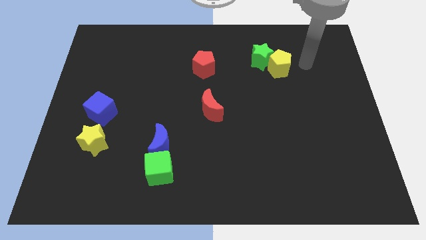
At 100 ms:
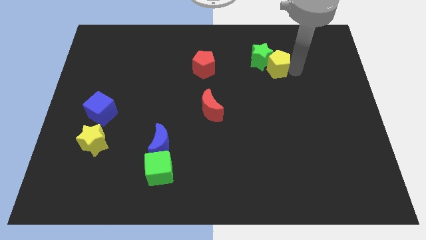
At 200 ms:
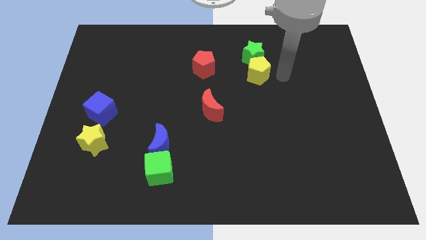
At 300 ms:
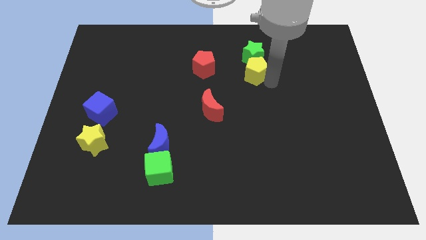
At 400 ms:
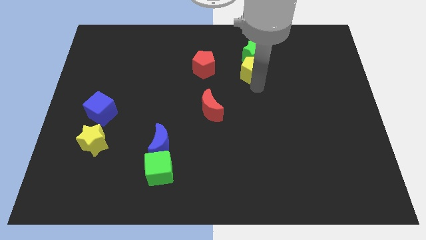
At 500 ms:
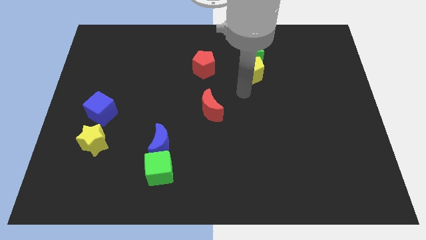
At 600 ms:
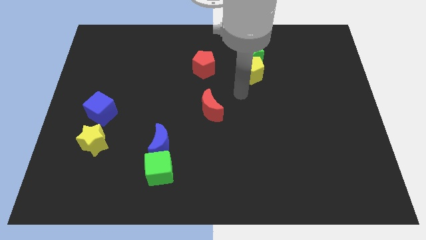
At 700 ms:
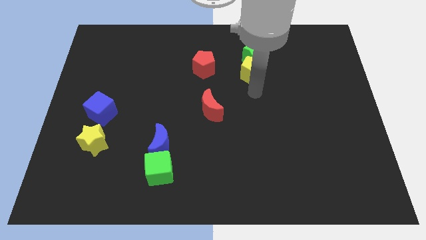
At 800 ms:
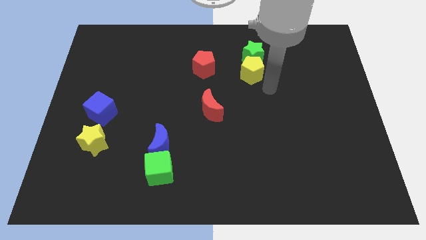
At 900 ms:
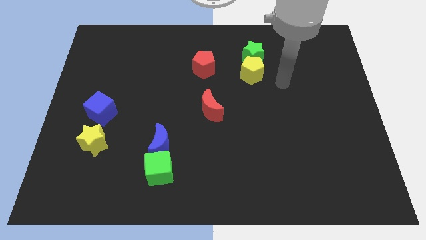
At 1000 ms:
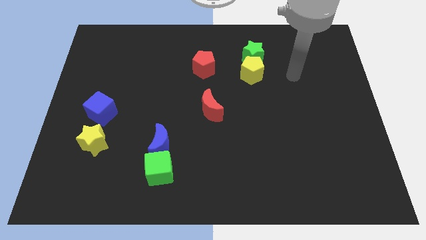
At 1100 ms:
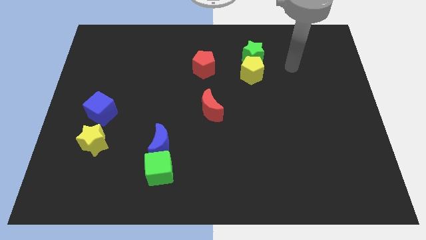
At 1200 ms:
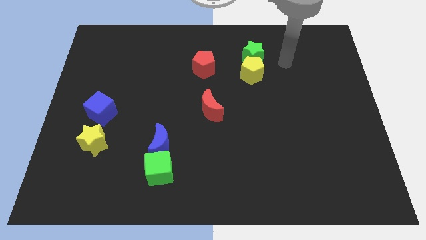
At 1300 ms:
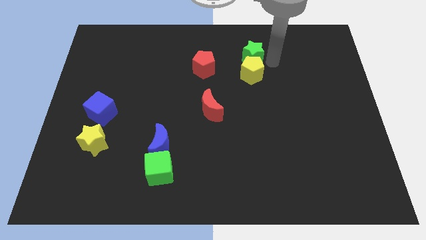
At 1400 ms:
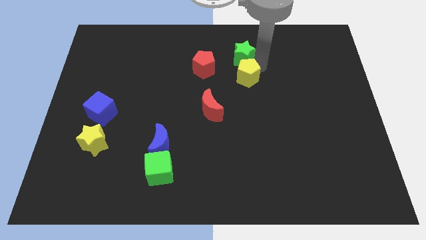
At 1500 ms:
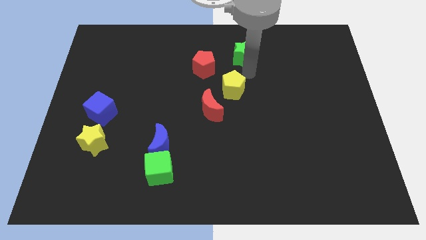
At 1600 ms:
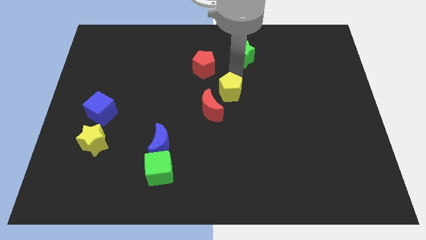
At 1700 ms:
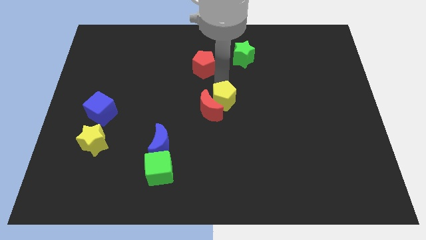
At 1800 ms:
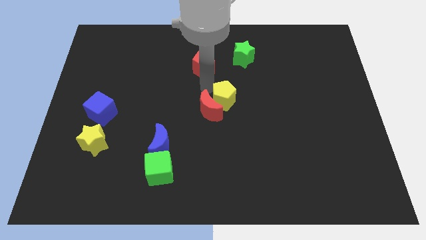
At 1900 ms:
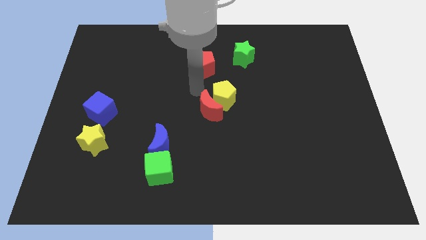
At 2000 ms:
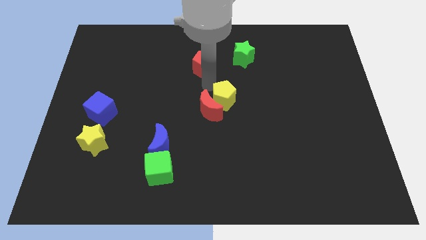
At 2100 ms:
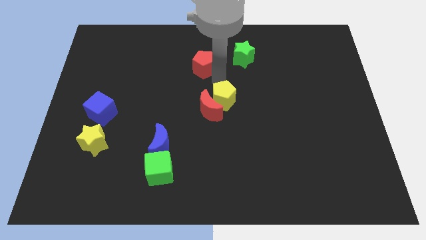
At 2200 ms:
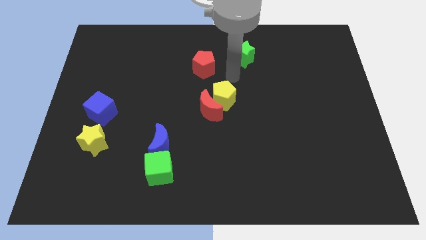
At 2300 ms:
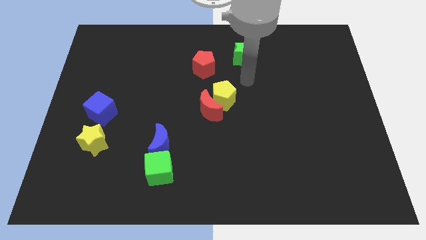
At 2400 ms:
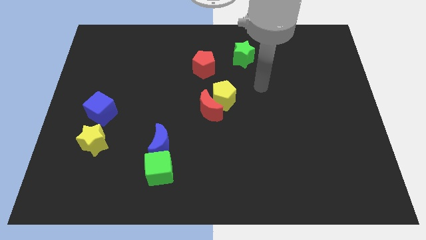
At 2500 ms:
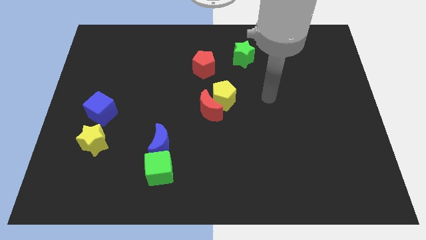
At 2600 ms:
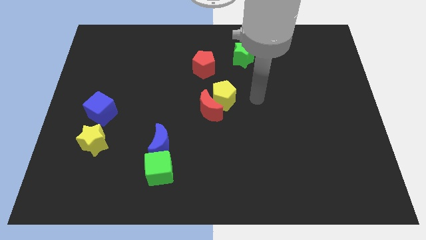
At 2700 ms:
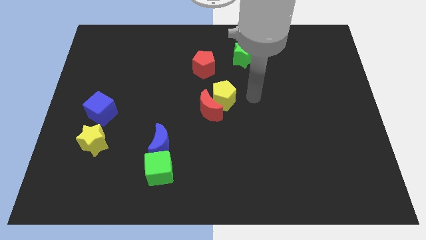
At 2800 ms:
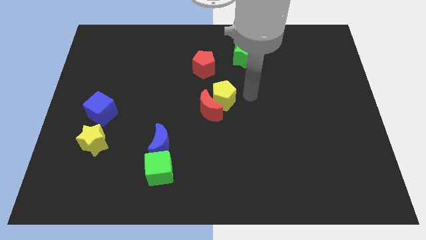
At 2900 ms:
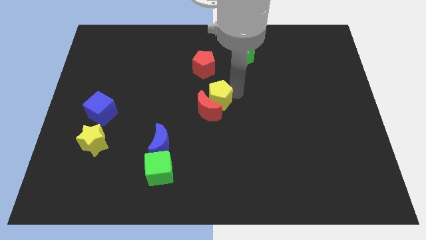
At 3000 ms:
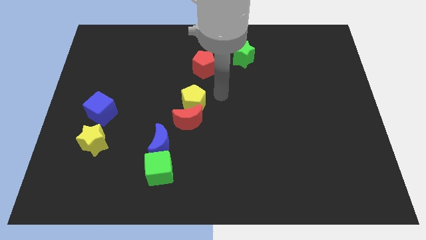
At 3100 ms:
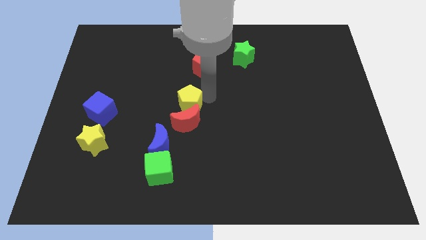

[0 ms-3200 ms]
move the yellow pentagon into the red crescent

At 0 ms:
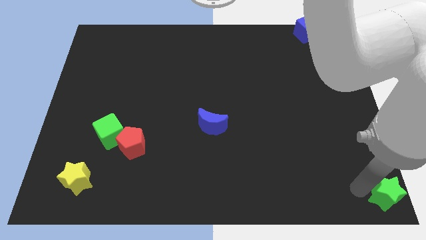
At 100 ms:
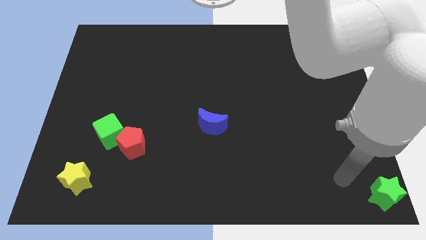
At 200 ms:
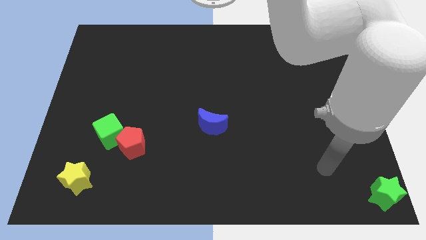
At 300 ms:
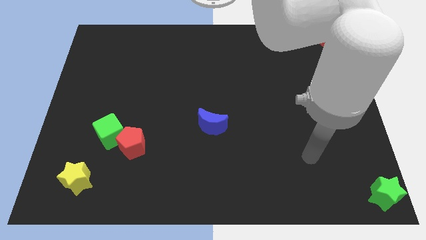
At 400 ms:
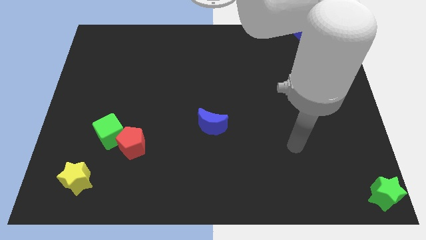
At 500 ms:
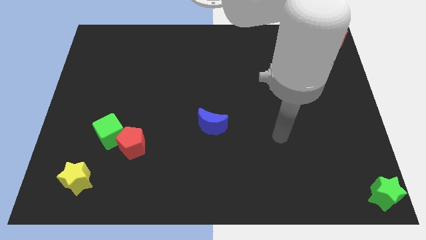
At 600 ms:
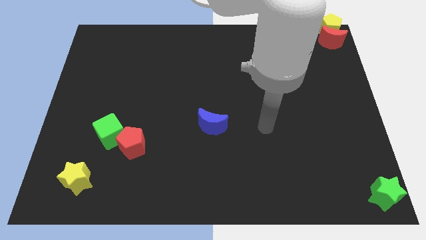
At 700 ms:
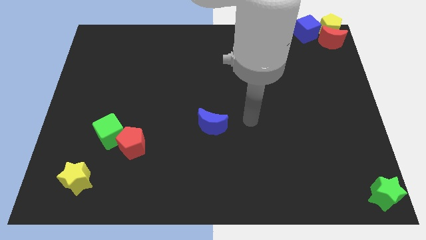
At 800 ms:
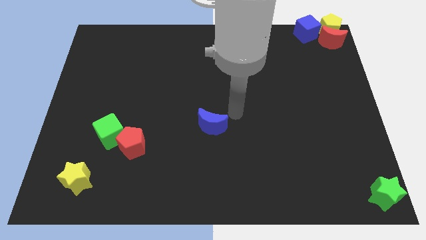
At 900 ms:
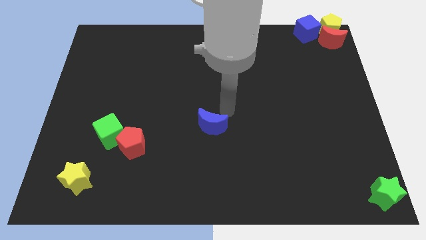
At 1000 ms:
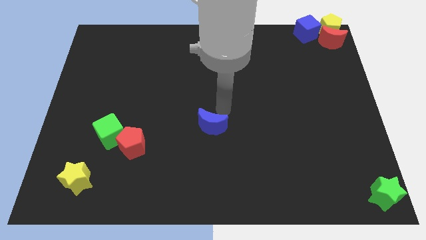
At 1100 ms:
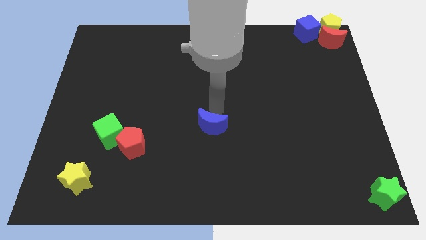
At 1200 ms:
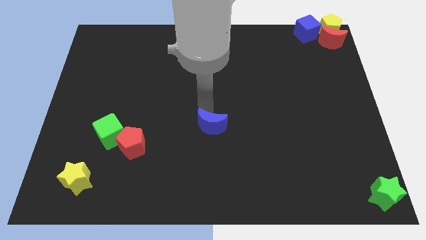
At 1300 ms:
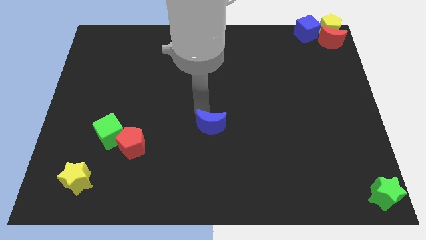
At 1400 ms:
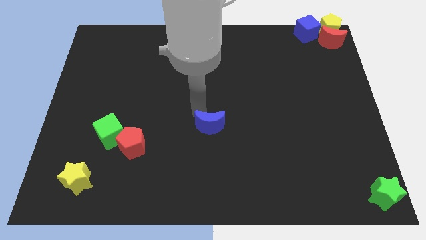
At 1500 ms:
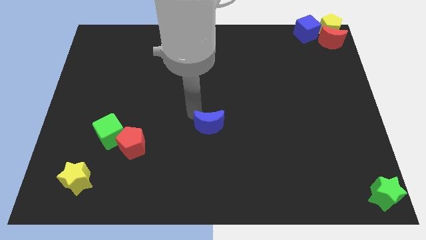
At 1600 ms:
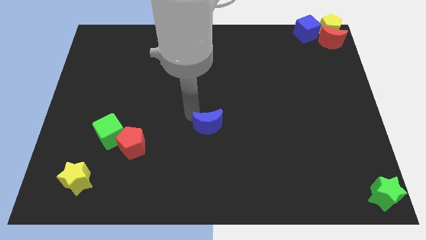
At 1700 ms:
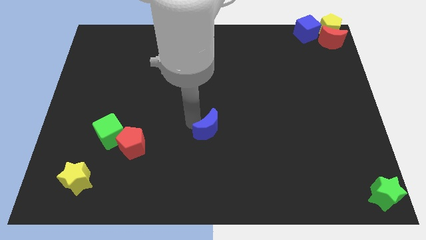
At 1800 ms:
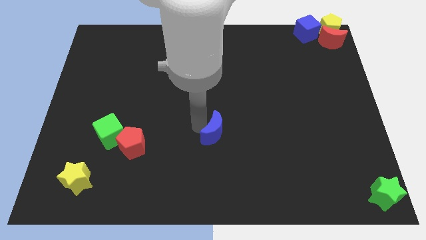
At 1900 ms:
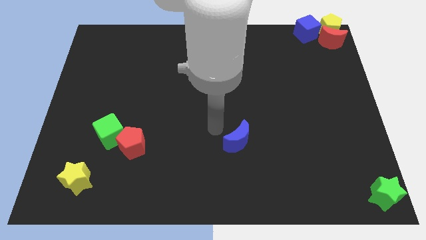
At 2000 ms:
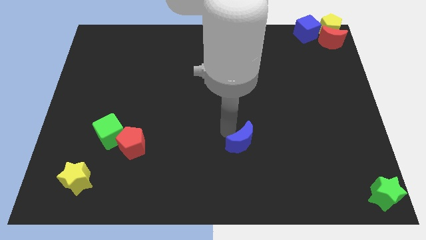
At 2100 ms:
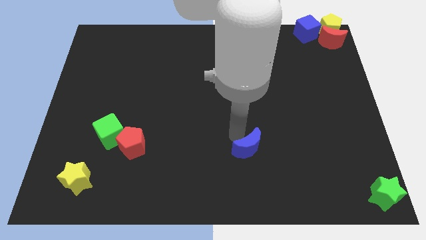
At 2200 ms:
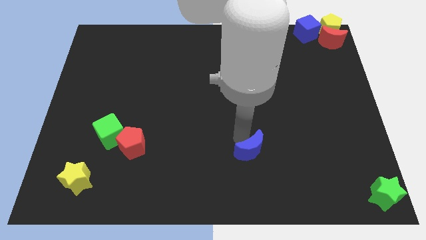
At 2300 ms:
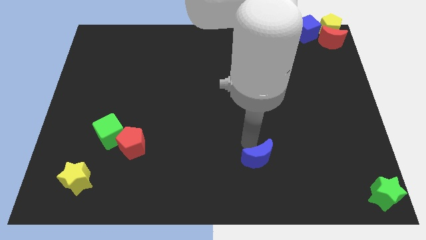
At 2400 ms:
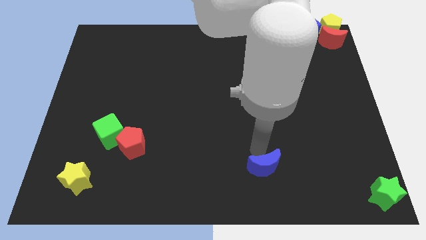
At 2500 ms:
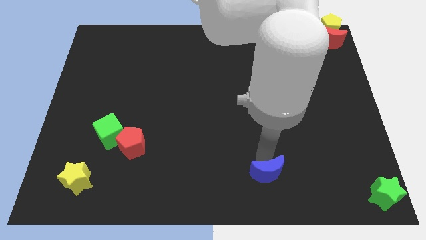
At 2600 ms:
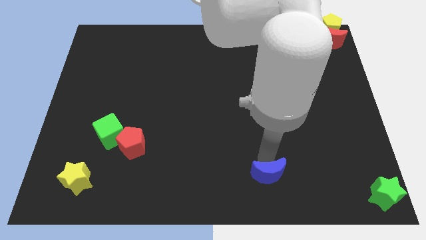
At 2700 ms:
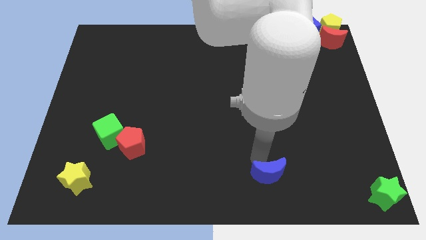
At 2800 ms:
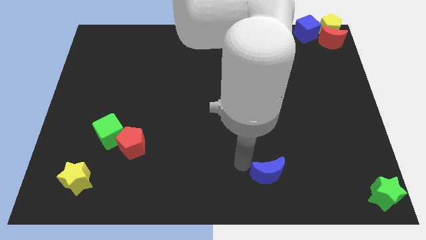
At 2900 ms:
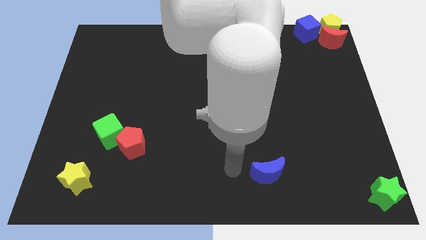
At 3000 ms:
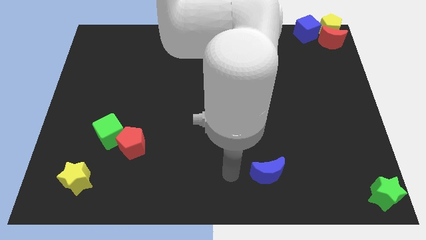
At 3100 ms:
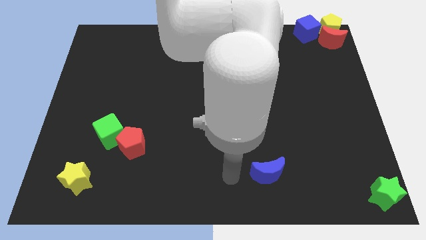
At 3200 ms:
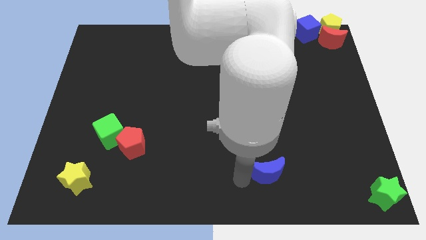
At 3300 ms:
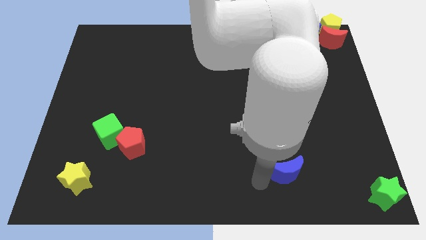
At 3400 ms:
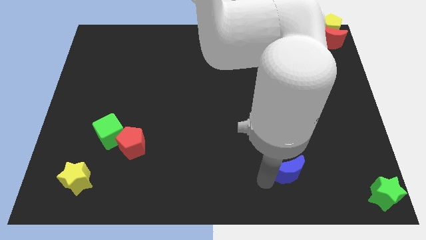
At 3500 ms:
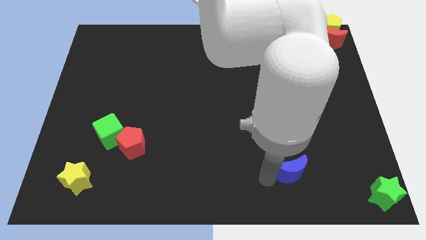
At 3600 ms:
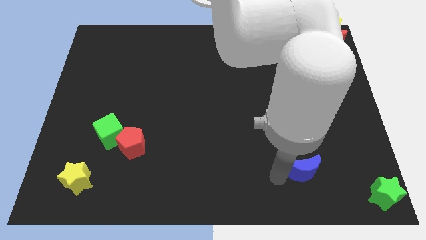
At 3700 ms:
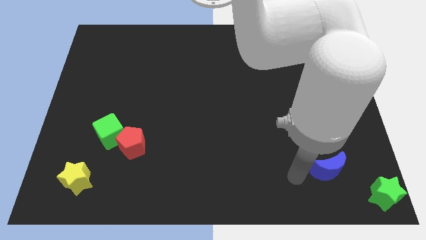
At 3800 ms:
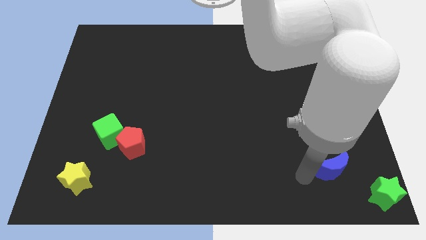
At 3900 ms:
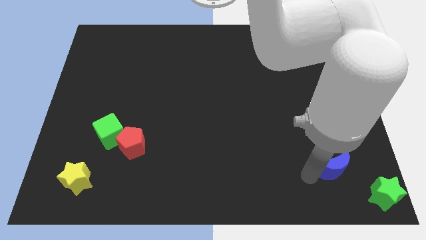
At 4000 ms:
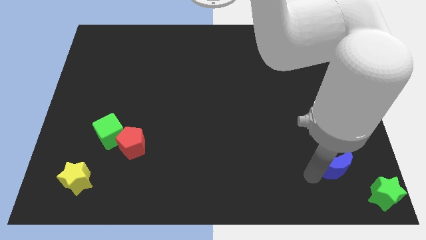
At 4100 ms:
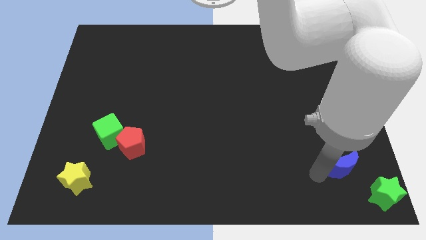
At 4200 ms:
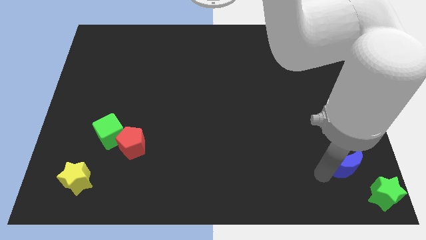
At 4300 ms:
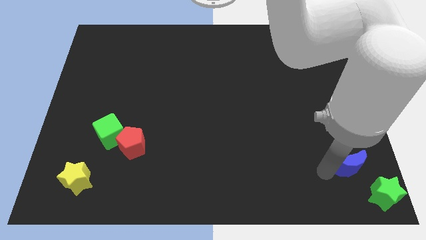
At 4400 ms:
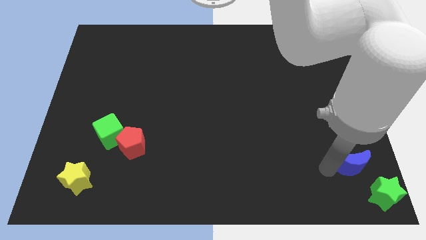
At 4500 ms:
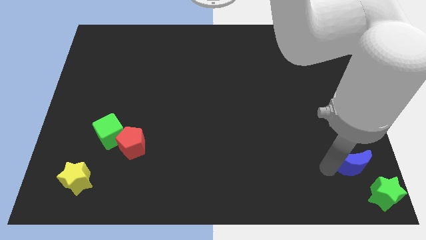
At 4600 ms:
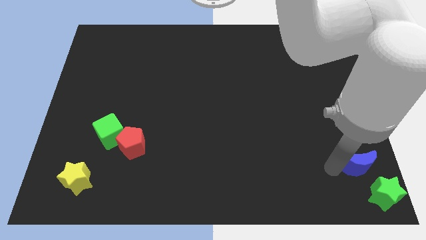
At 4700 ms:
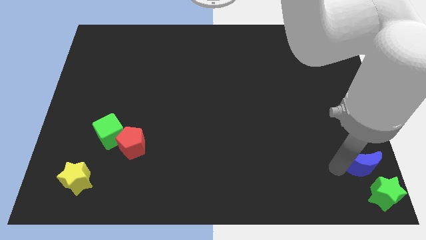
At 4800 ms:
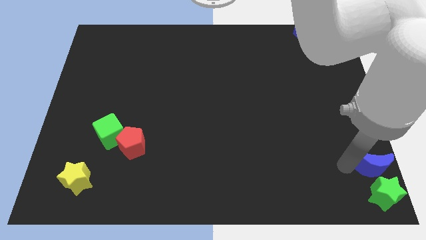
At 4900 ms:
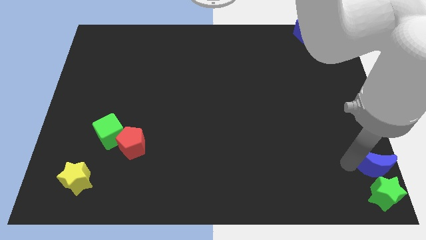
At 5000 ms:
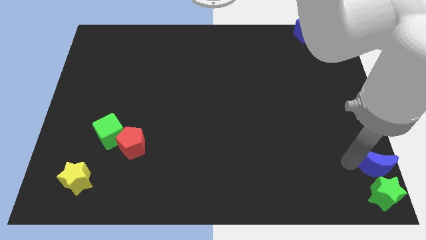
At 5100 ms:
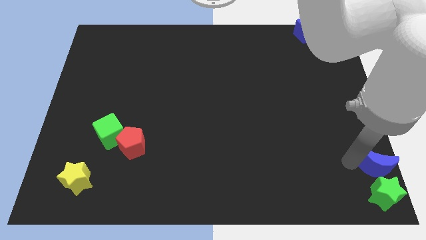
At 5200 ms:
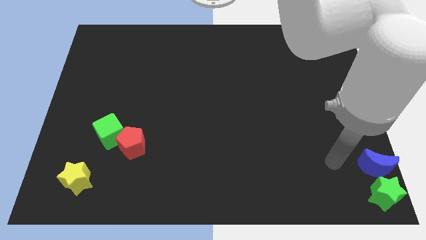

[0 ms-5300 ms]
move the bleu crescent close to the top side of the green star

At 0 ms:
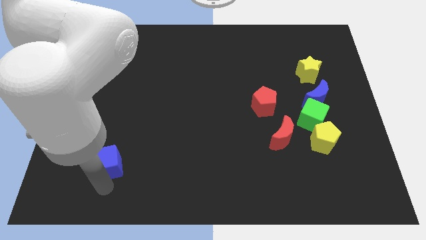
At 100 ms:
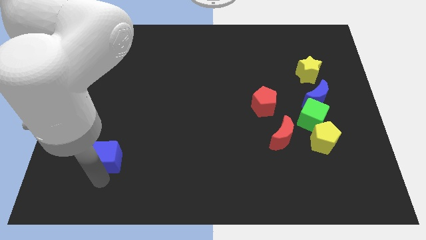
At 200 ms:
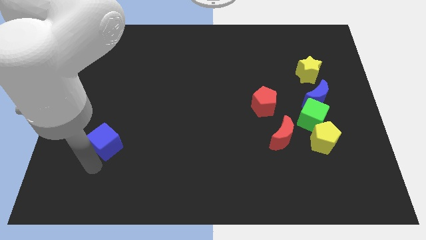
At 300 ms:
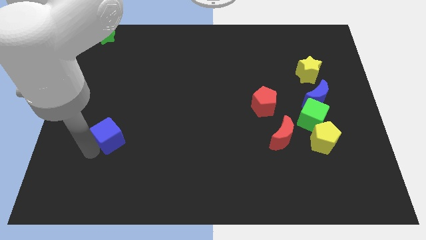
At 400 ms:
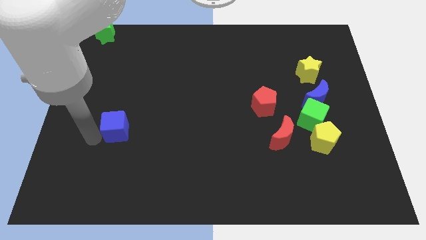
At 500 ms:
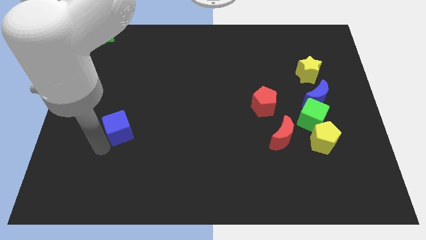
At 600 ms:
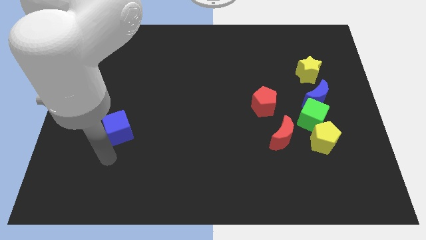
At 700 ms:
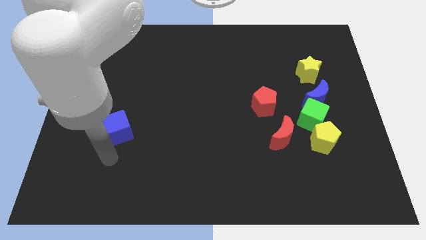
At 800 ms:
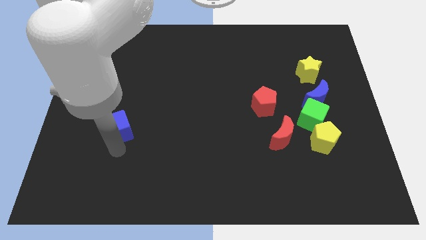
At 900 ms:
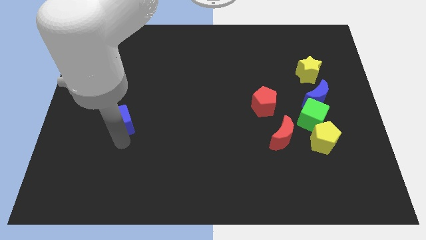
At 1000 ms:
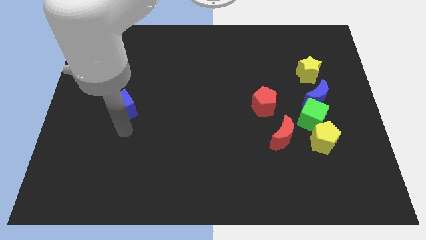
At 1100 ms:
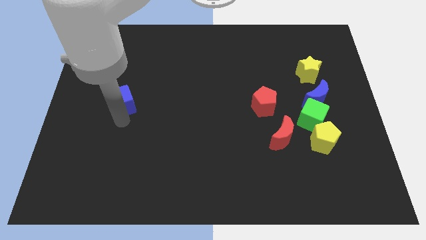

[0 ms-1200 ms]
push blue cube upwards
